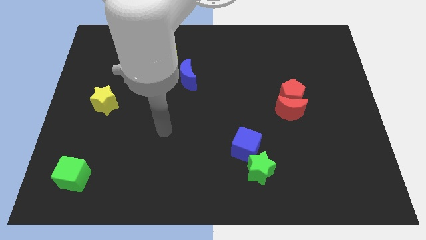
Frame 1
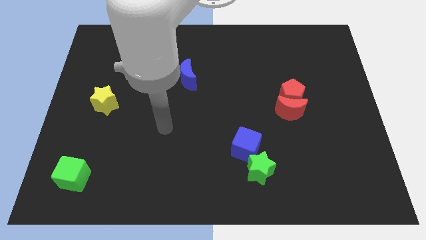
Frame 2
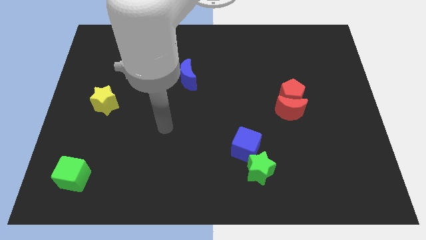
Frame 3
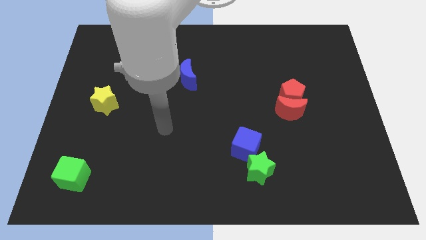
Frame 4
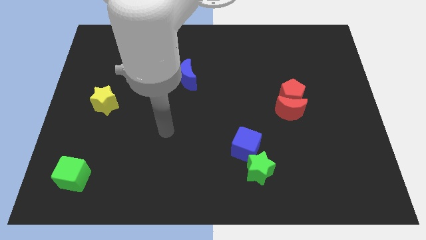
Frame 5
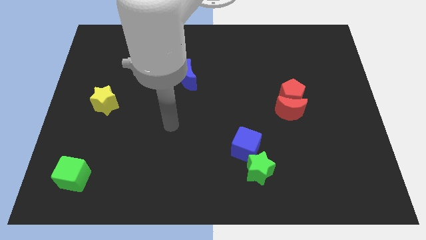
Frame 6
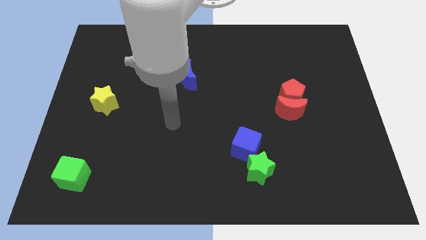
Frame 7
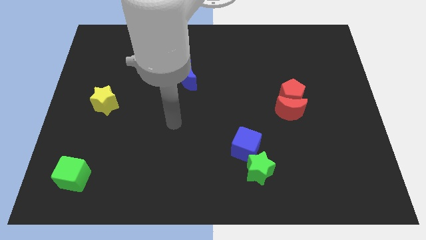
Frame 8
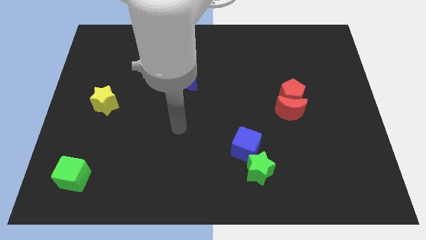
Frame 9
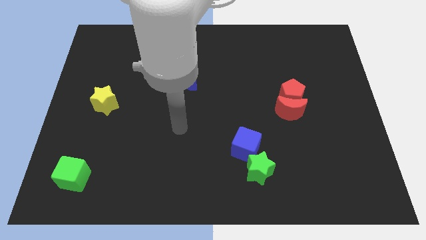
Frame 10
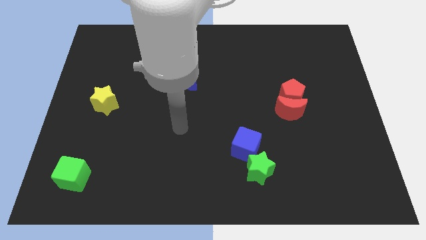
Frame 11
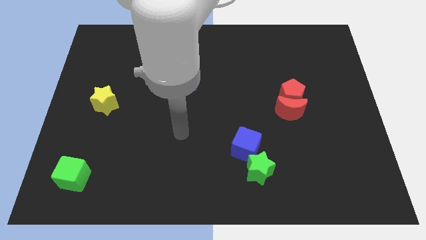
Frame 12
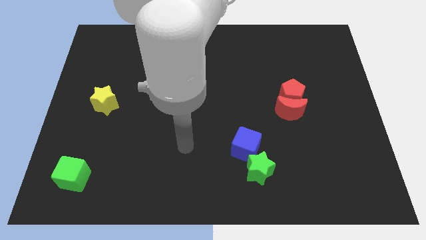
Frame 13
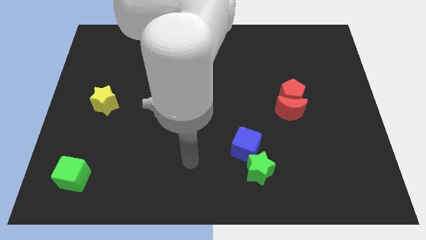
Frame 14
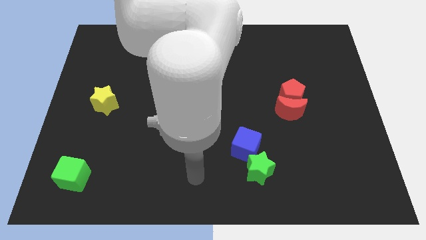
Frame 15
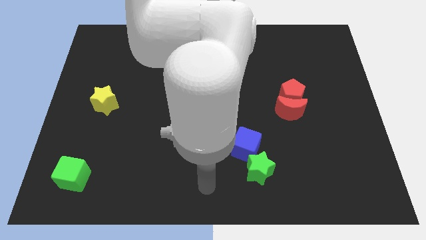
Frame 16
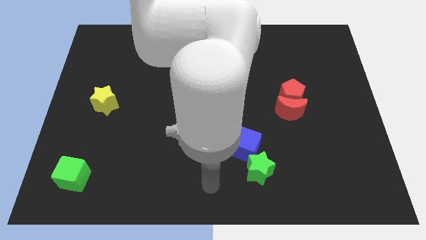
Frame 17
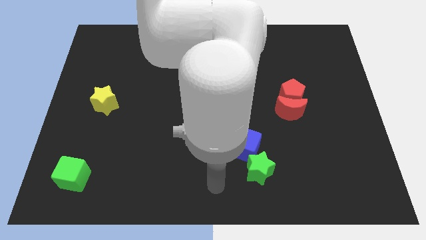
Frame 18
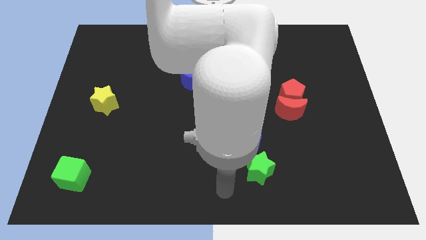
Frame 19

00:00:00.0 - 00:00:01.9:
move your arm to the bottom center of the board

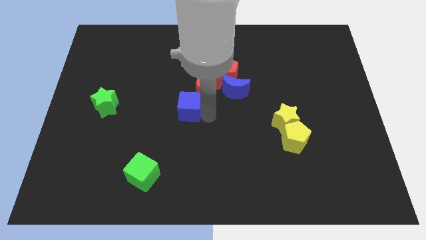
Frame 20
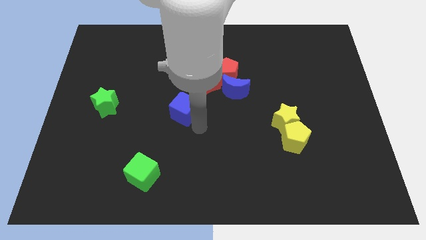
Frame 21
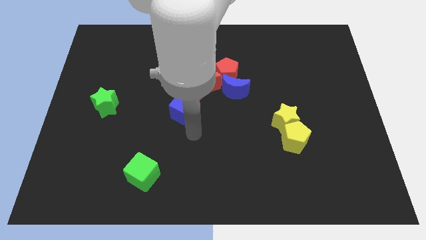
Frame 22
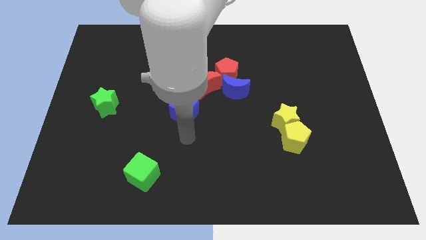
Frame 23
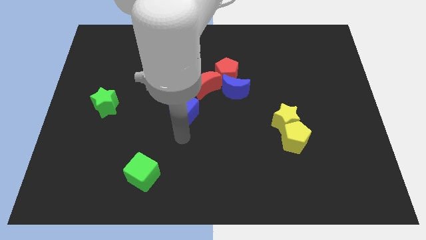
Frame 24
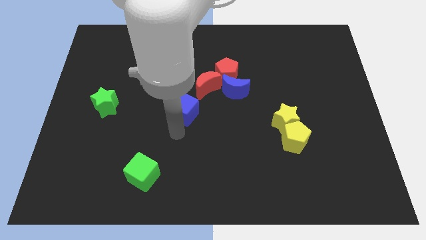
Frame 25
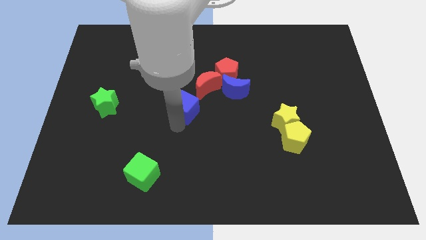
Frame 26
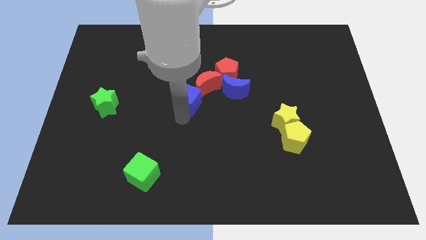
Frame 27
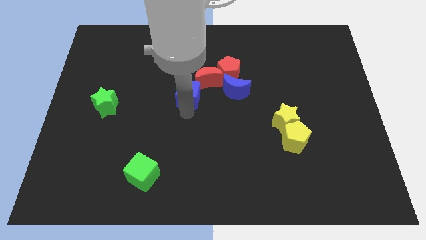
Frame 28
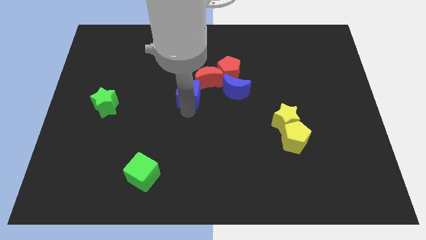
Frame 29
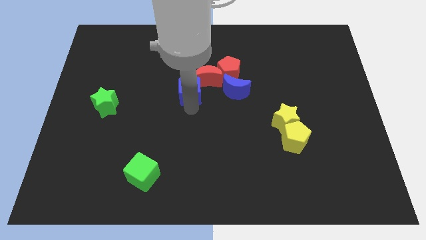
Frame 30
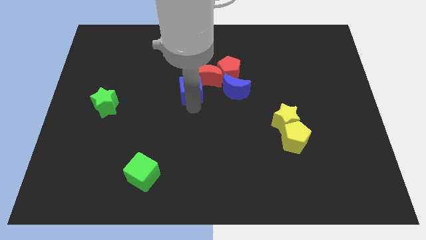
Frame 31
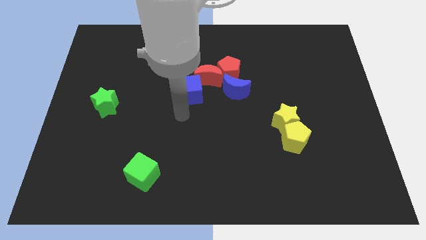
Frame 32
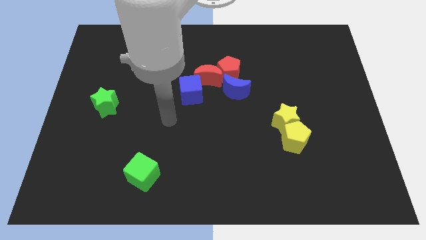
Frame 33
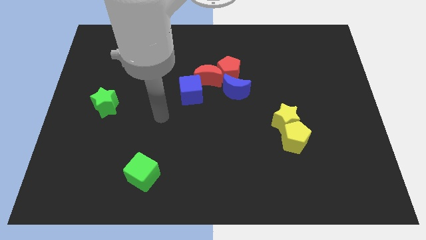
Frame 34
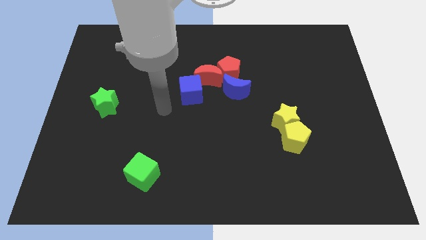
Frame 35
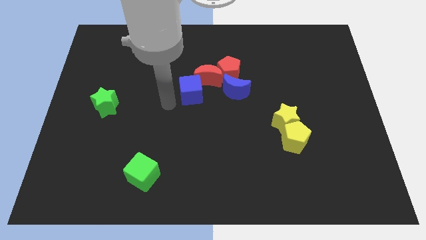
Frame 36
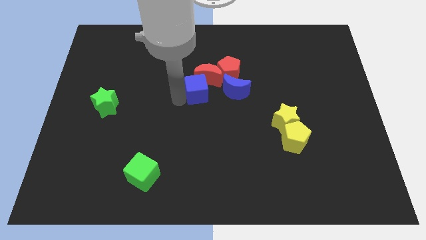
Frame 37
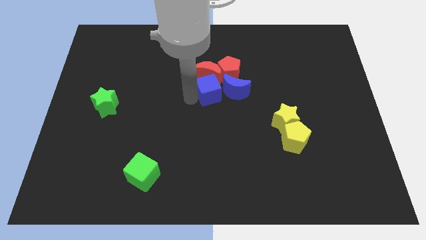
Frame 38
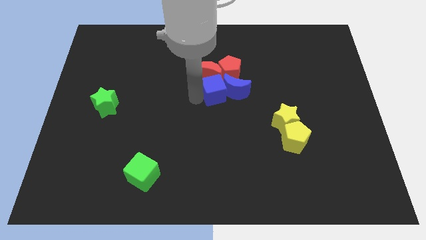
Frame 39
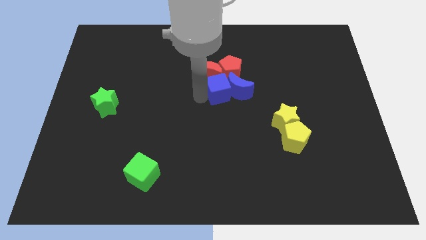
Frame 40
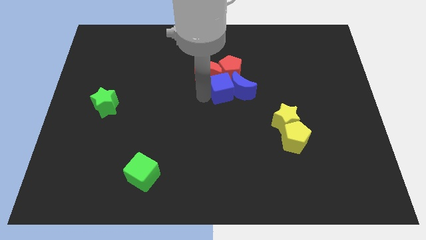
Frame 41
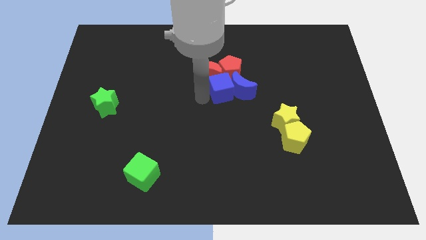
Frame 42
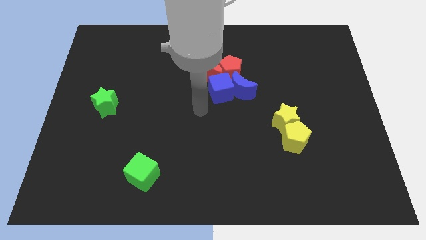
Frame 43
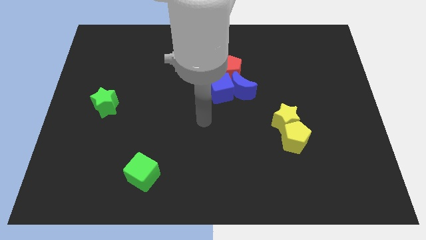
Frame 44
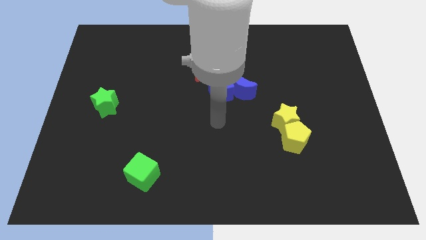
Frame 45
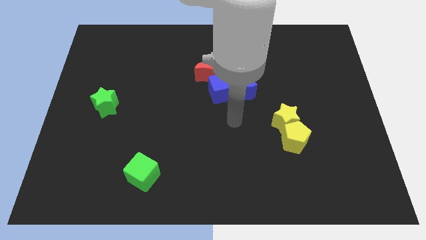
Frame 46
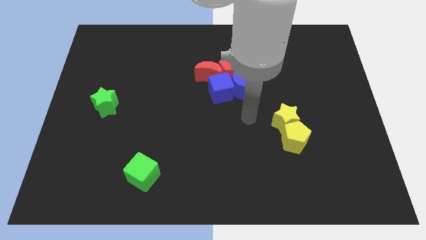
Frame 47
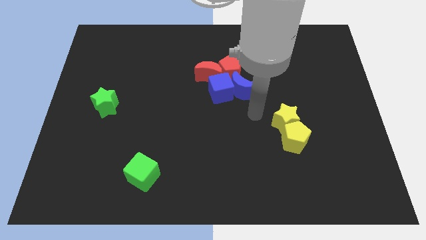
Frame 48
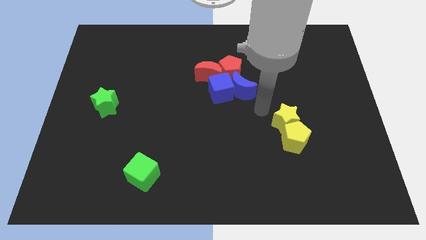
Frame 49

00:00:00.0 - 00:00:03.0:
push the blue cube left to the blue crescent

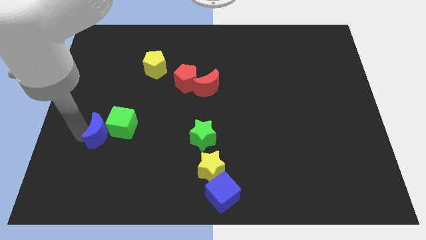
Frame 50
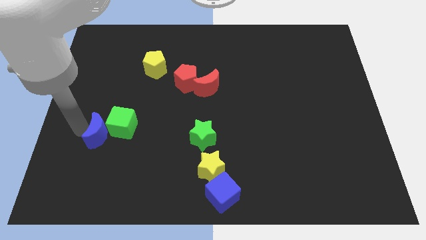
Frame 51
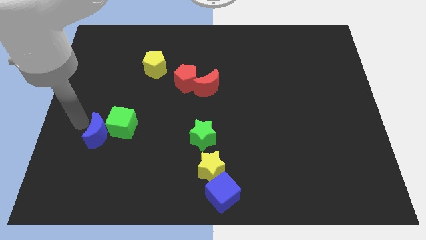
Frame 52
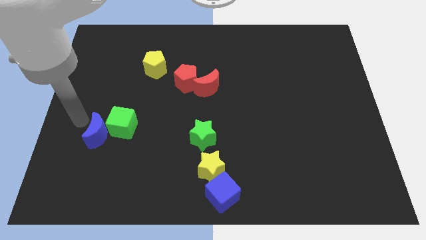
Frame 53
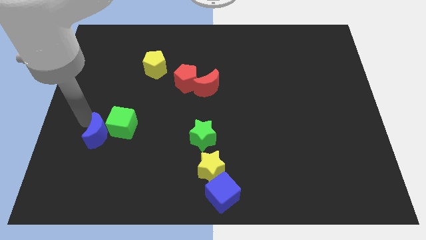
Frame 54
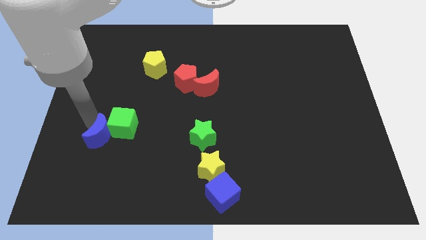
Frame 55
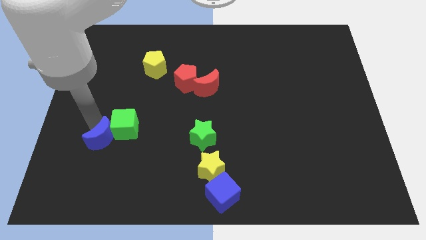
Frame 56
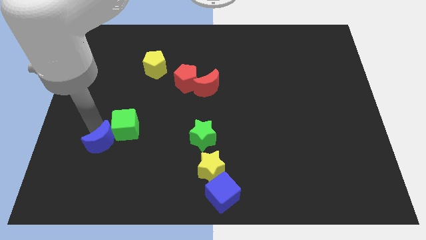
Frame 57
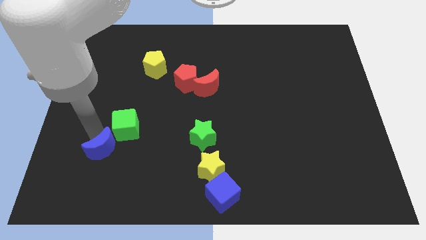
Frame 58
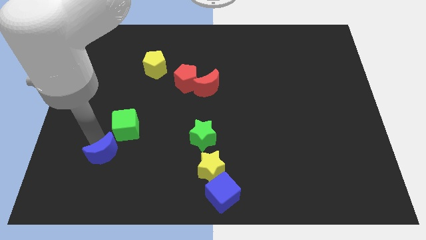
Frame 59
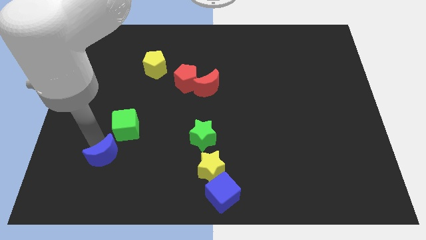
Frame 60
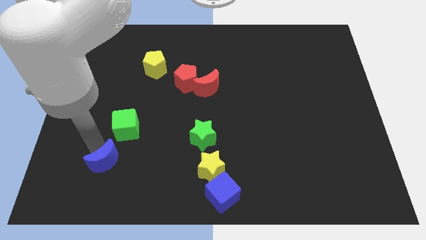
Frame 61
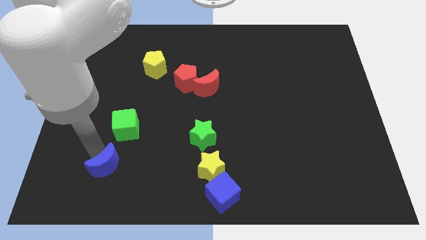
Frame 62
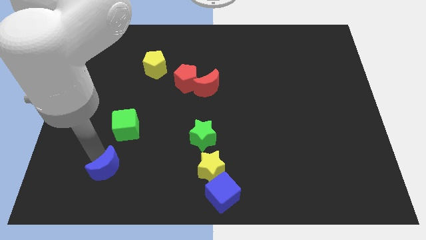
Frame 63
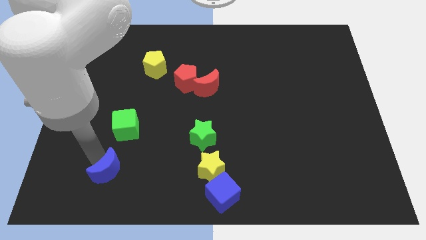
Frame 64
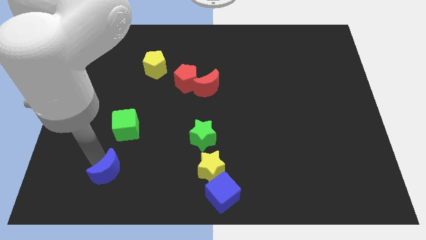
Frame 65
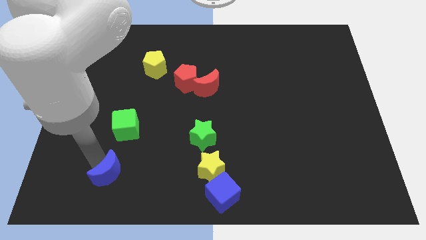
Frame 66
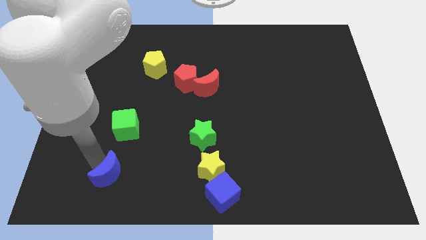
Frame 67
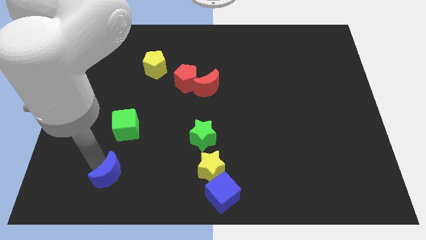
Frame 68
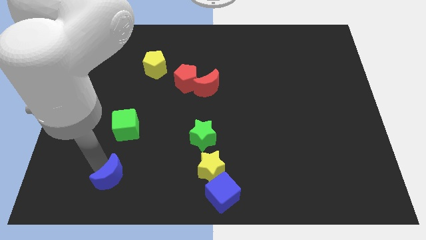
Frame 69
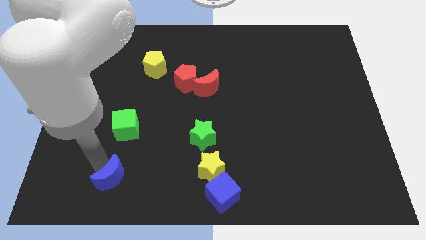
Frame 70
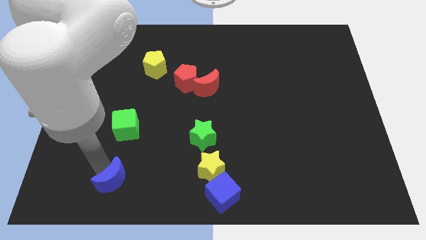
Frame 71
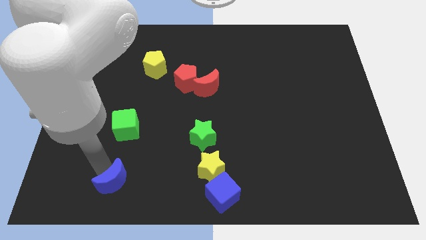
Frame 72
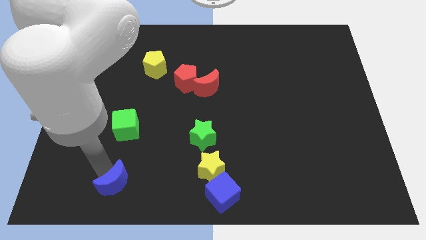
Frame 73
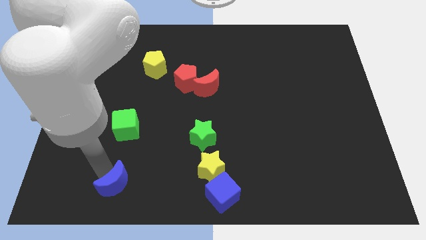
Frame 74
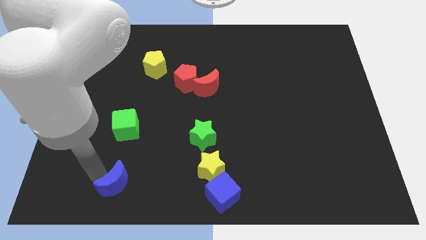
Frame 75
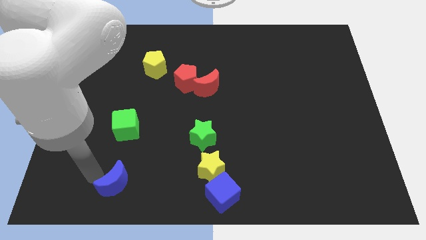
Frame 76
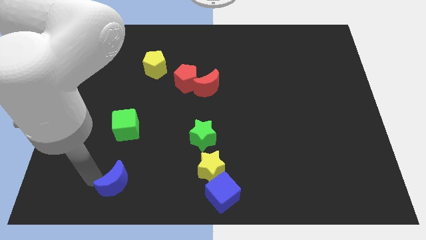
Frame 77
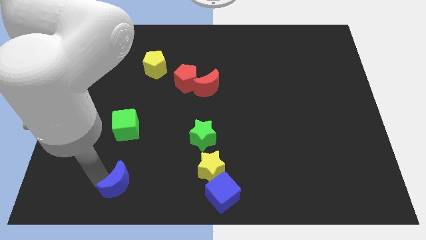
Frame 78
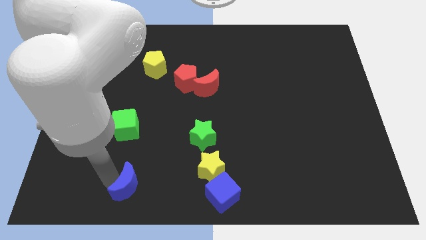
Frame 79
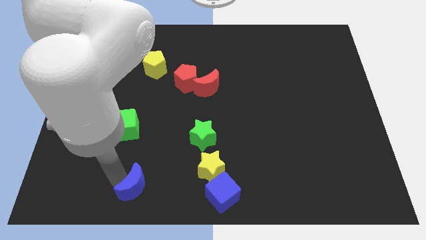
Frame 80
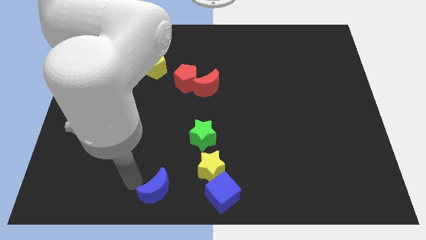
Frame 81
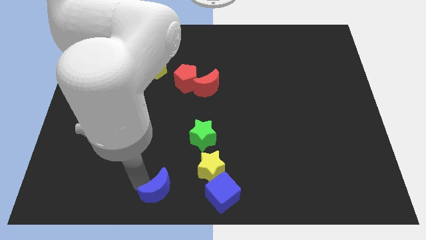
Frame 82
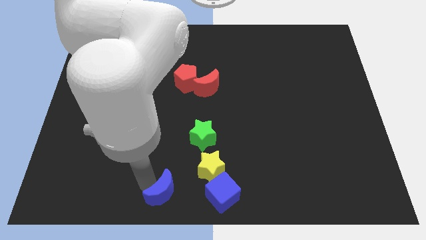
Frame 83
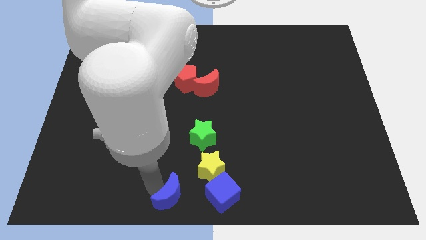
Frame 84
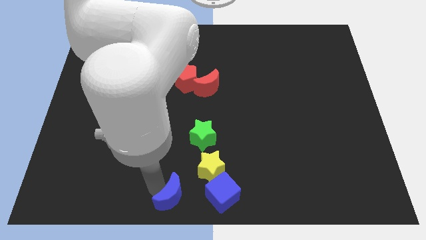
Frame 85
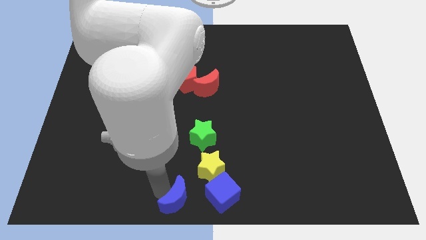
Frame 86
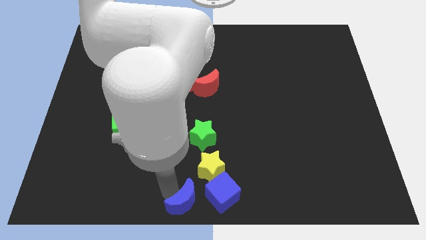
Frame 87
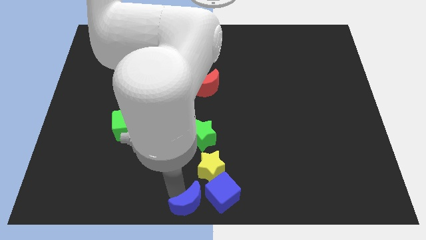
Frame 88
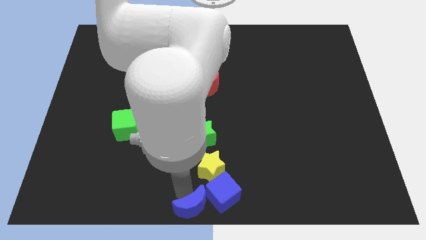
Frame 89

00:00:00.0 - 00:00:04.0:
move blue moon towards blue cube

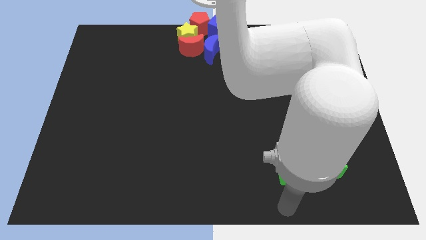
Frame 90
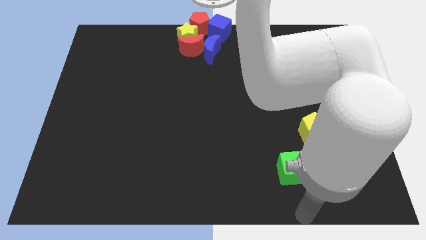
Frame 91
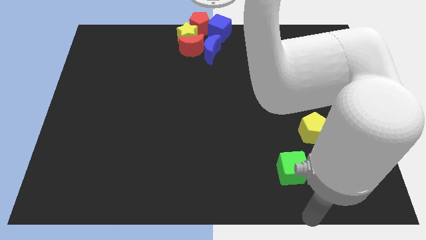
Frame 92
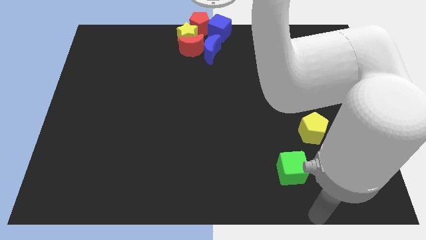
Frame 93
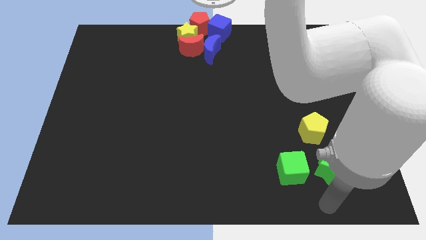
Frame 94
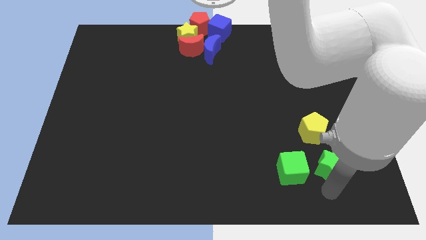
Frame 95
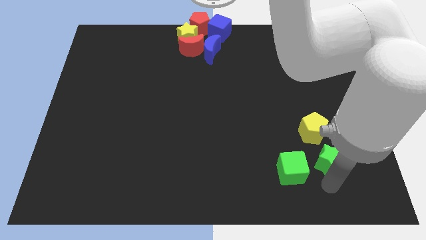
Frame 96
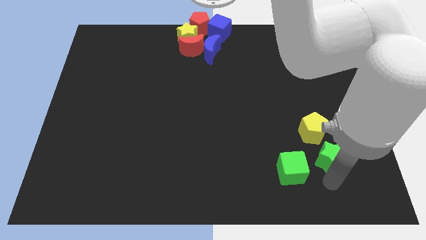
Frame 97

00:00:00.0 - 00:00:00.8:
move the green star slightly to the top
